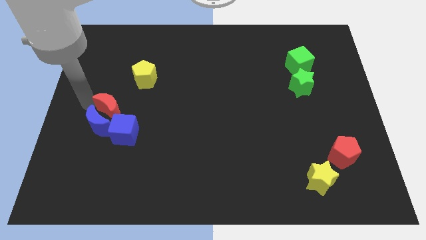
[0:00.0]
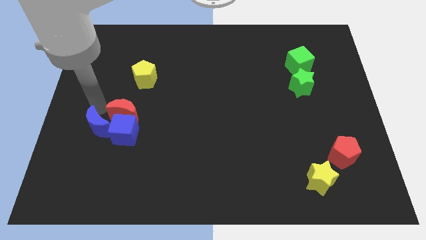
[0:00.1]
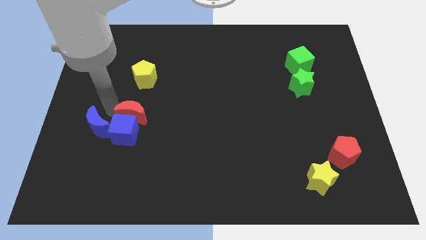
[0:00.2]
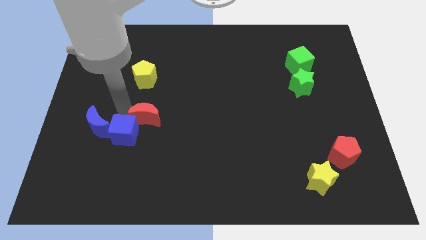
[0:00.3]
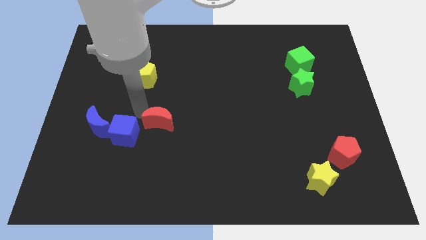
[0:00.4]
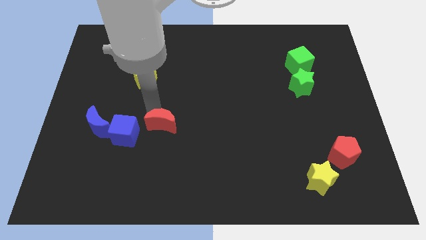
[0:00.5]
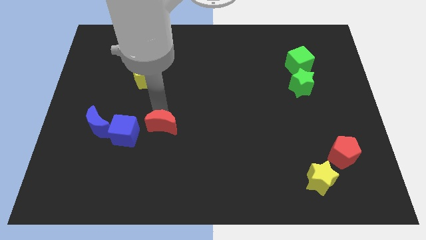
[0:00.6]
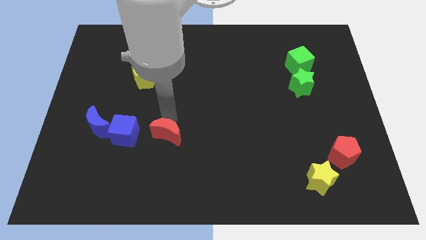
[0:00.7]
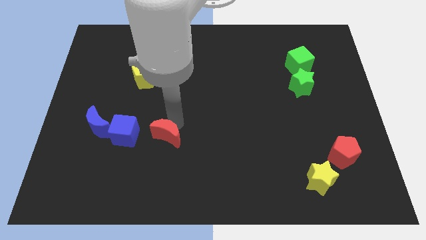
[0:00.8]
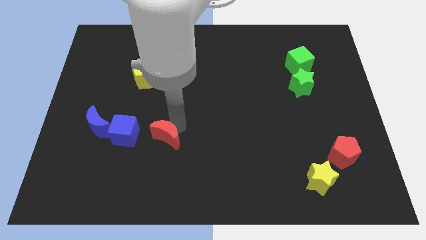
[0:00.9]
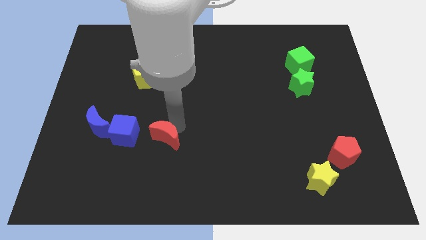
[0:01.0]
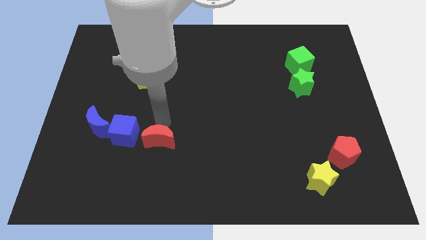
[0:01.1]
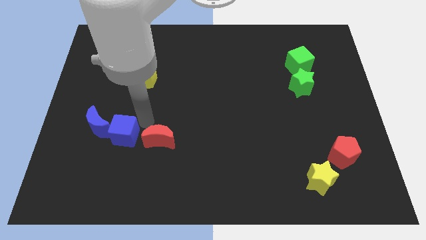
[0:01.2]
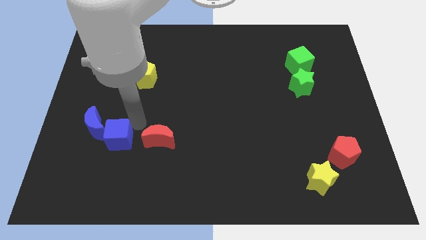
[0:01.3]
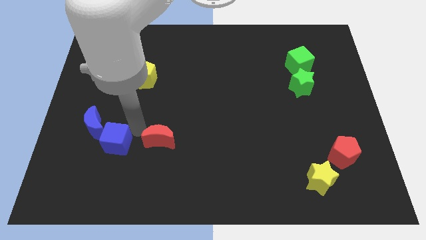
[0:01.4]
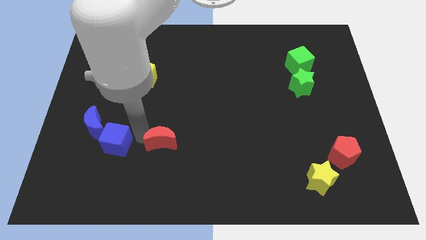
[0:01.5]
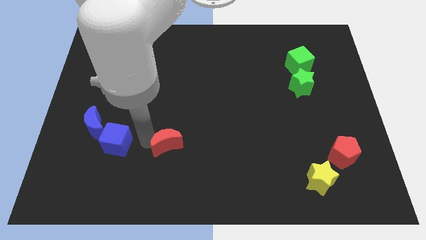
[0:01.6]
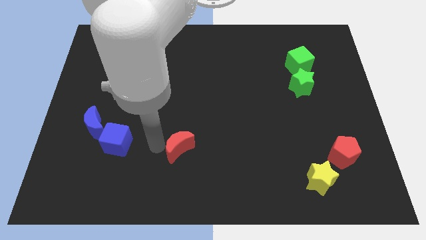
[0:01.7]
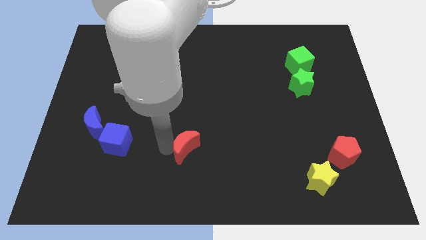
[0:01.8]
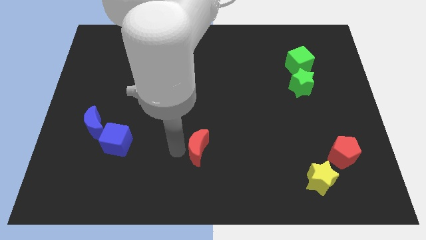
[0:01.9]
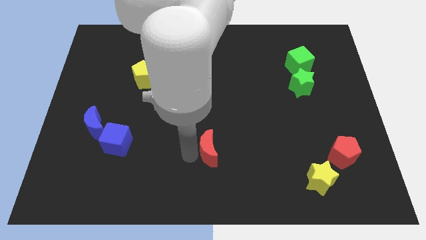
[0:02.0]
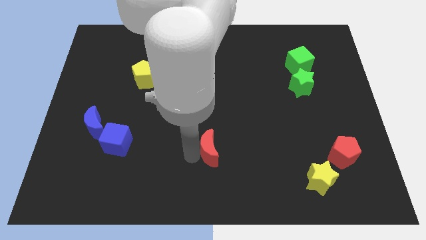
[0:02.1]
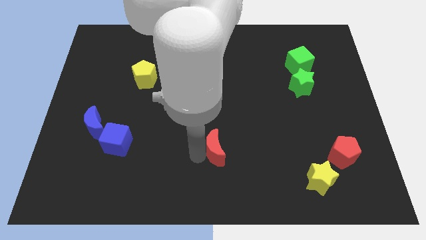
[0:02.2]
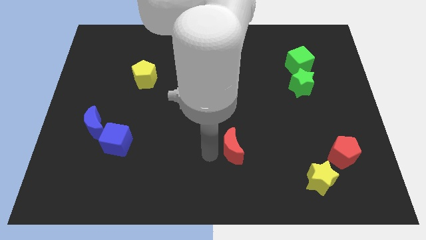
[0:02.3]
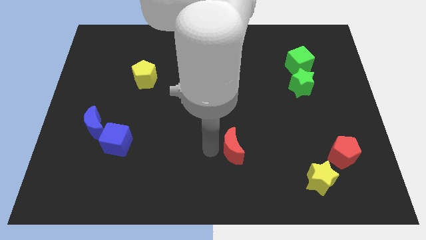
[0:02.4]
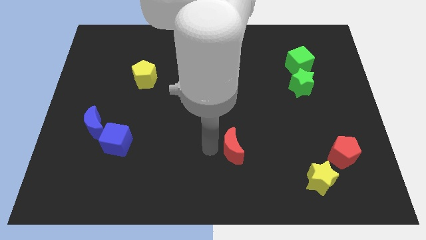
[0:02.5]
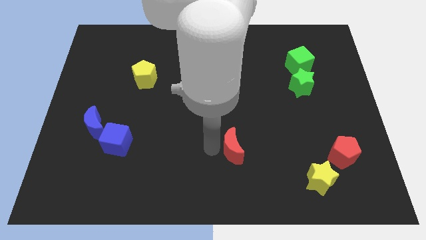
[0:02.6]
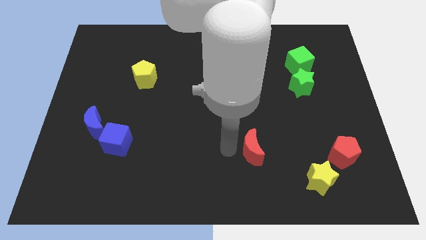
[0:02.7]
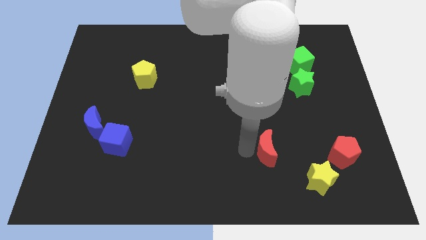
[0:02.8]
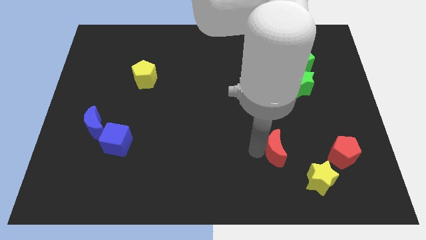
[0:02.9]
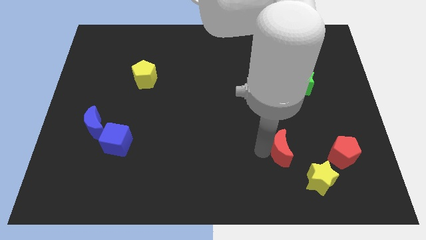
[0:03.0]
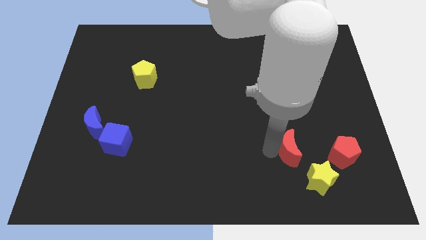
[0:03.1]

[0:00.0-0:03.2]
slide red moon towards red pentagon

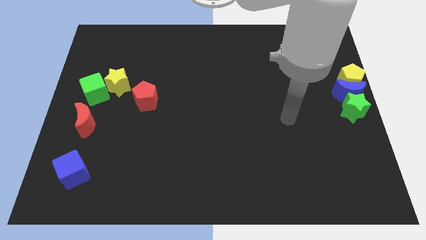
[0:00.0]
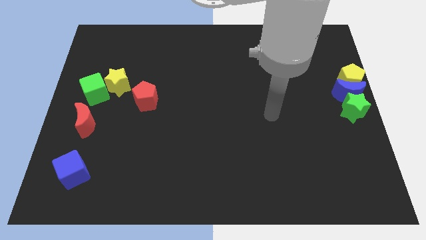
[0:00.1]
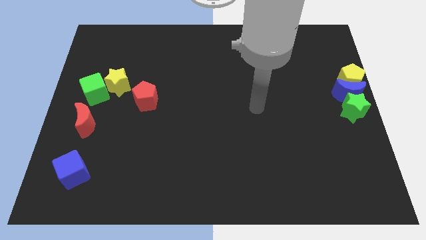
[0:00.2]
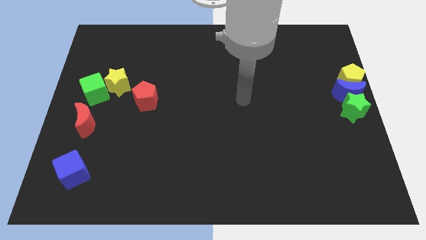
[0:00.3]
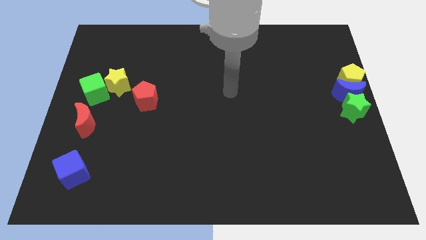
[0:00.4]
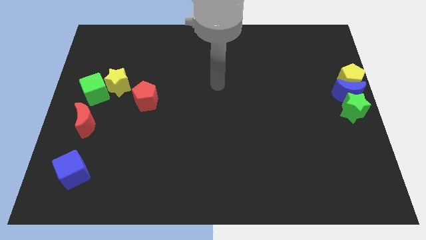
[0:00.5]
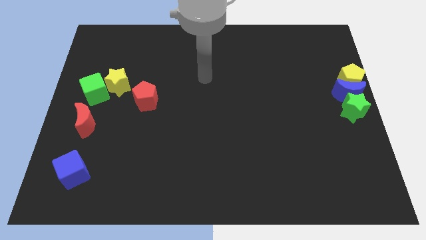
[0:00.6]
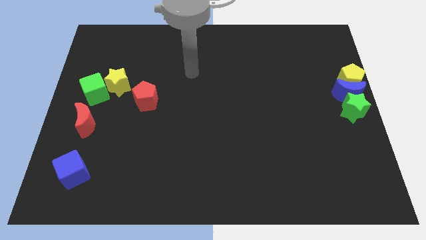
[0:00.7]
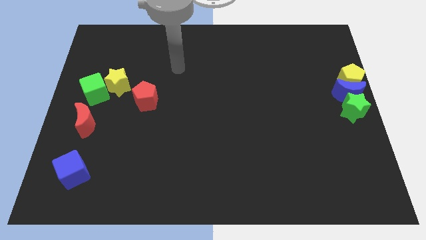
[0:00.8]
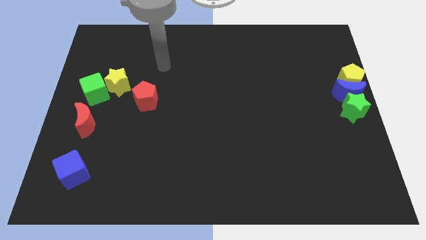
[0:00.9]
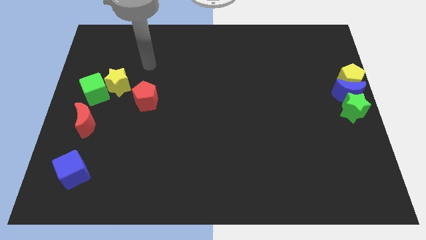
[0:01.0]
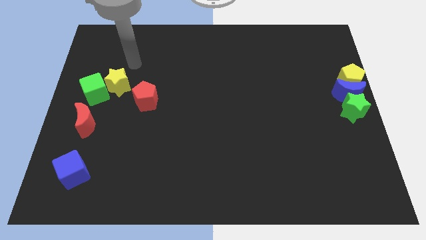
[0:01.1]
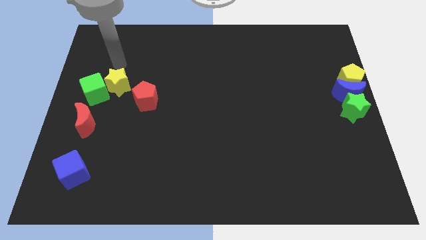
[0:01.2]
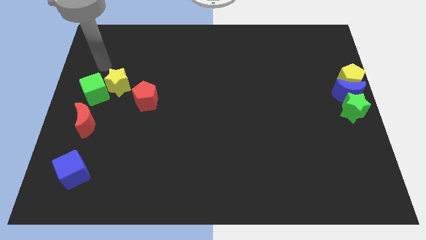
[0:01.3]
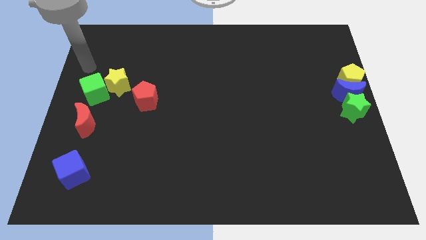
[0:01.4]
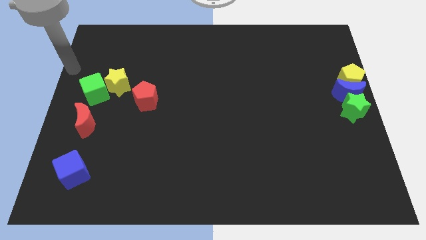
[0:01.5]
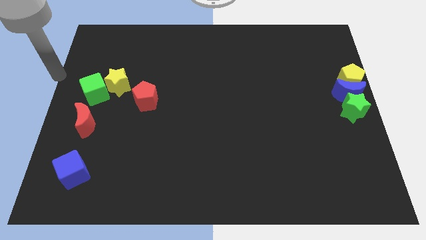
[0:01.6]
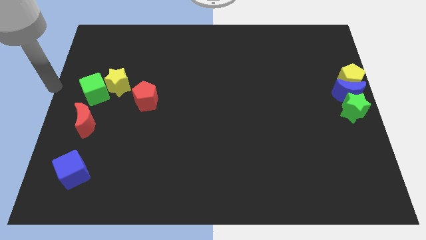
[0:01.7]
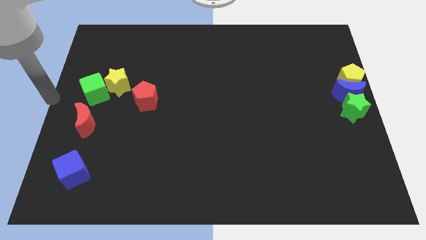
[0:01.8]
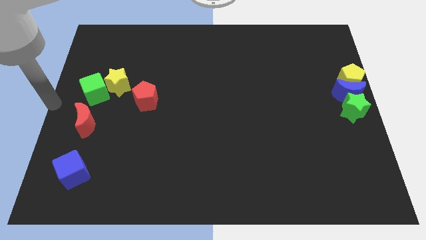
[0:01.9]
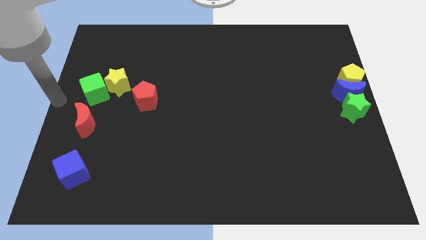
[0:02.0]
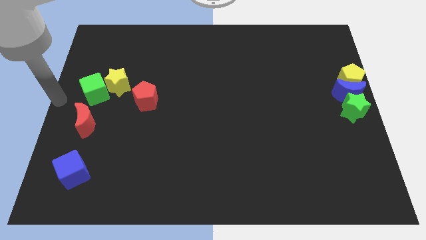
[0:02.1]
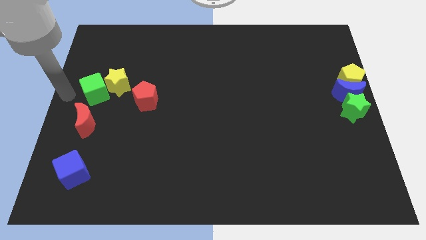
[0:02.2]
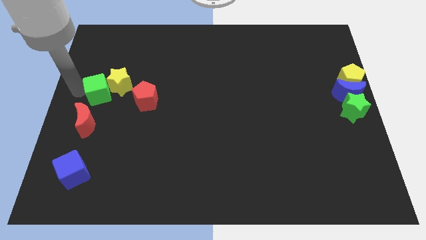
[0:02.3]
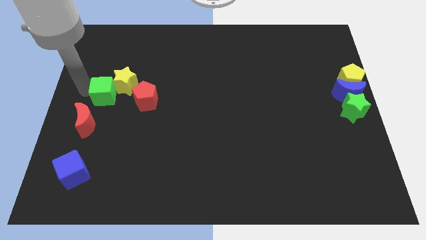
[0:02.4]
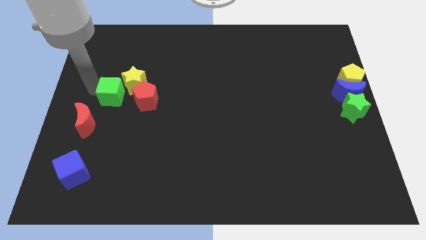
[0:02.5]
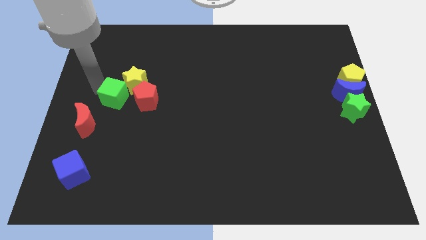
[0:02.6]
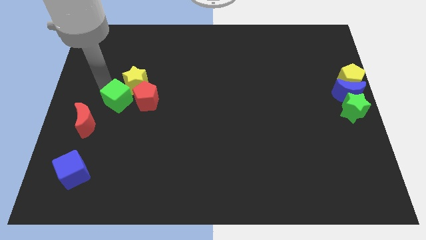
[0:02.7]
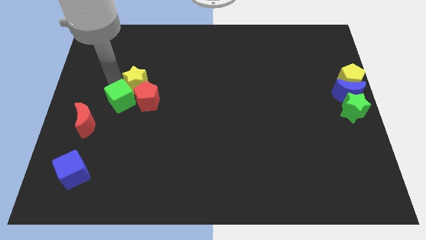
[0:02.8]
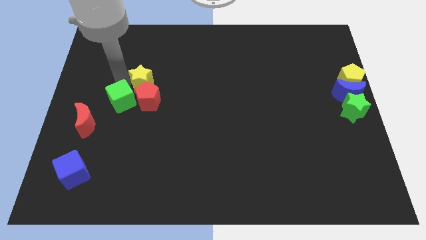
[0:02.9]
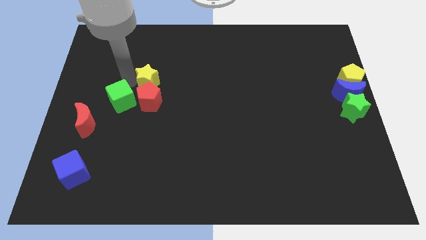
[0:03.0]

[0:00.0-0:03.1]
place green cube to the left of red pentagon

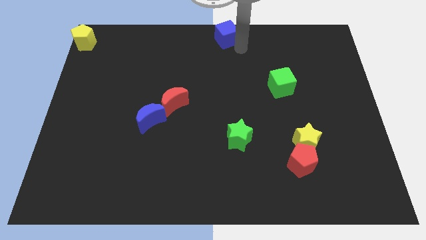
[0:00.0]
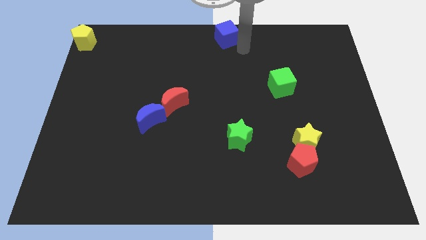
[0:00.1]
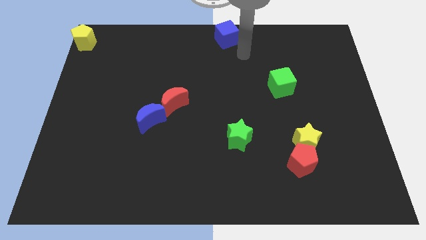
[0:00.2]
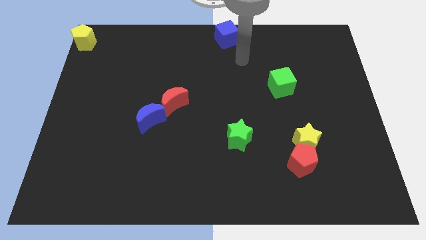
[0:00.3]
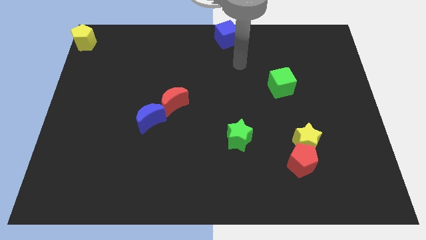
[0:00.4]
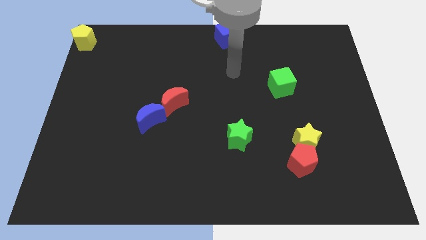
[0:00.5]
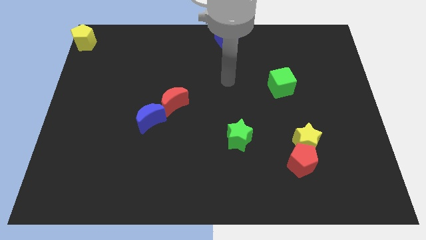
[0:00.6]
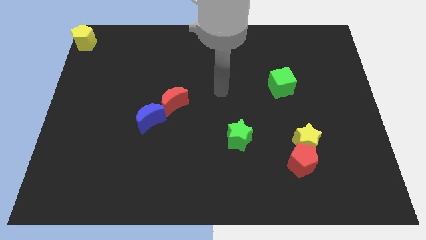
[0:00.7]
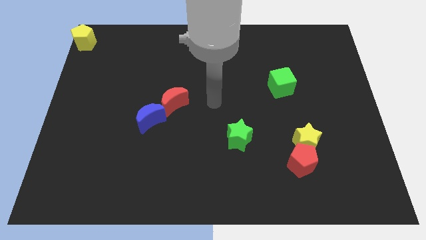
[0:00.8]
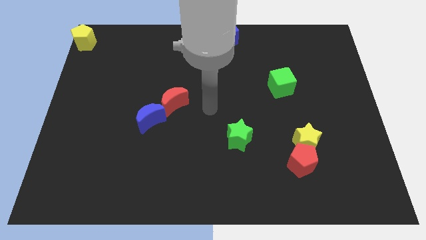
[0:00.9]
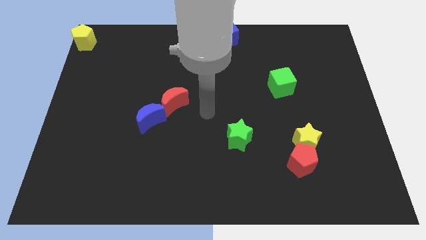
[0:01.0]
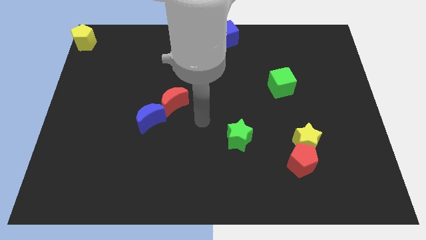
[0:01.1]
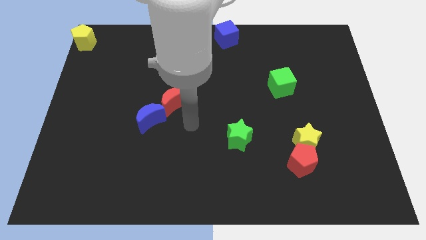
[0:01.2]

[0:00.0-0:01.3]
move your arm away from blue cube

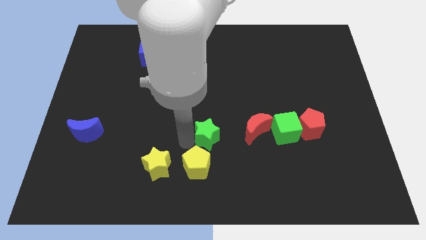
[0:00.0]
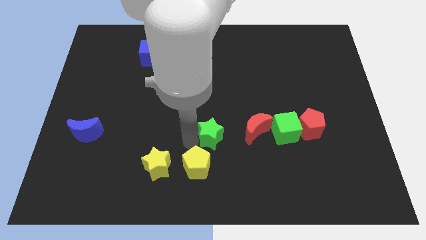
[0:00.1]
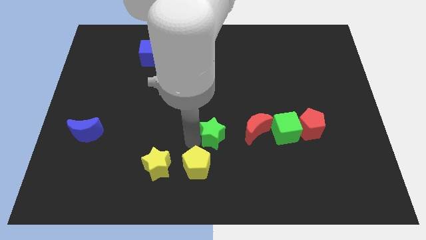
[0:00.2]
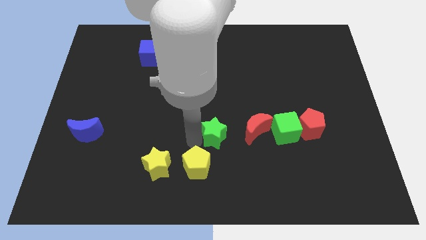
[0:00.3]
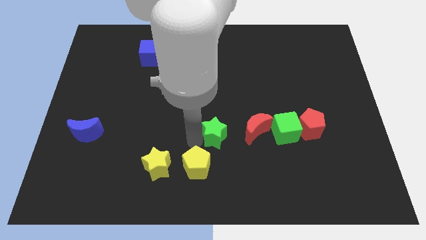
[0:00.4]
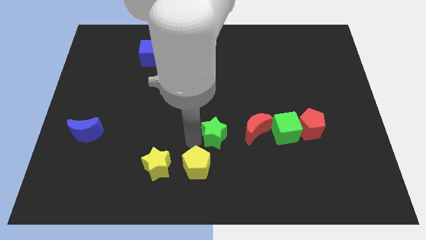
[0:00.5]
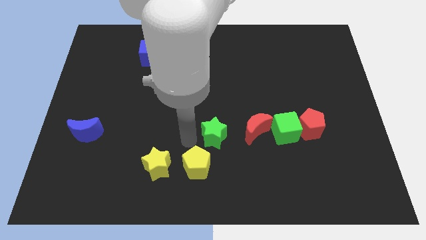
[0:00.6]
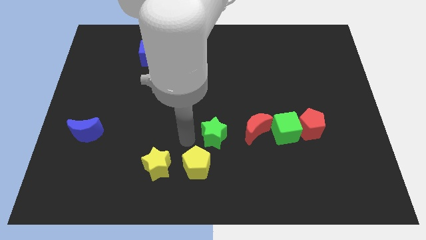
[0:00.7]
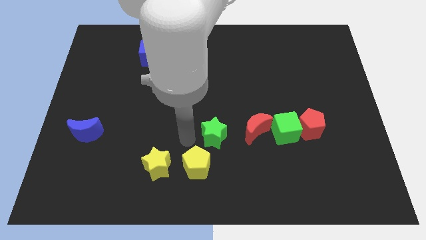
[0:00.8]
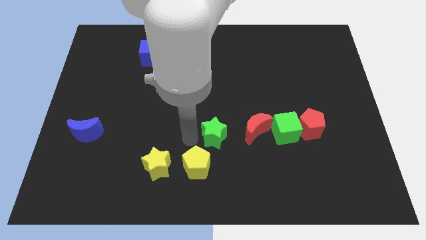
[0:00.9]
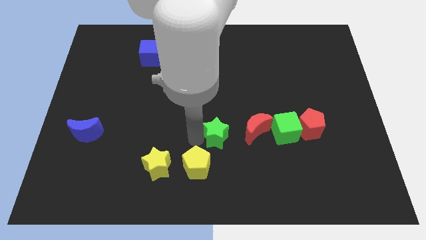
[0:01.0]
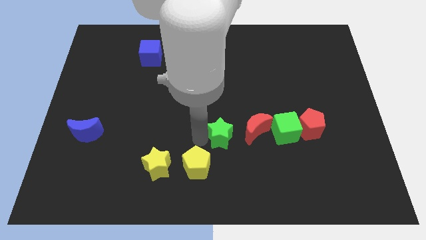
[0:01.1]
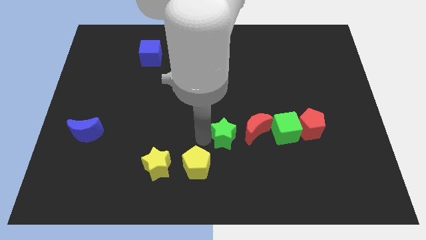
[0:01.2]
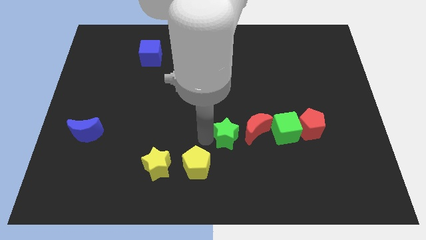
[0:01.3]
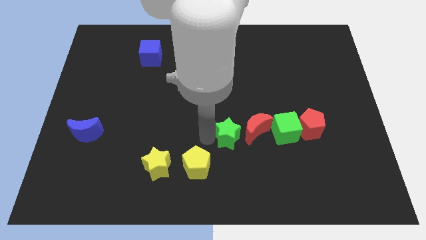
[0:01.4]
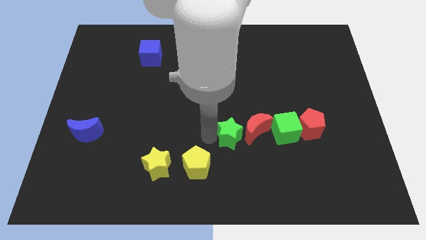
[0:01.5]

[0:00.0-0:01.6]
push the green star towards the red moon
